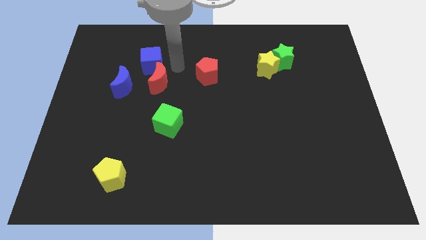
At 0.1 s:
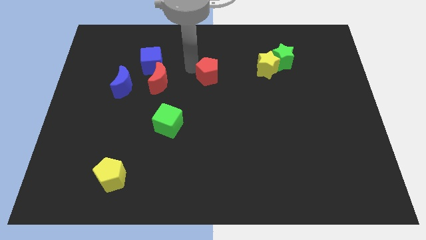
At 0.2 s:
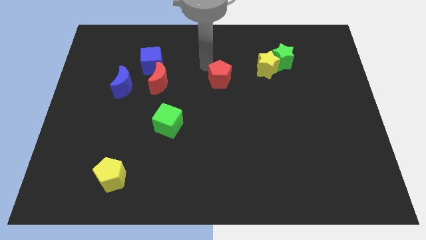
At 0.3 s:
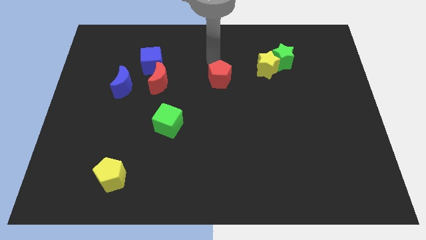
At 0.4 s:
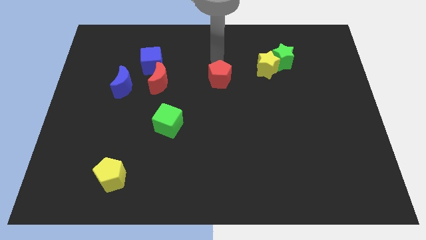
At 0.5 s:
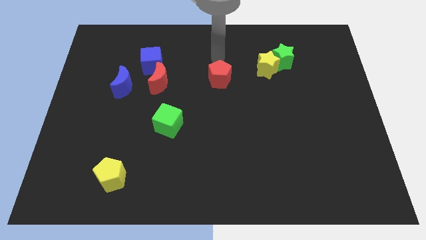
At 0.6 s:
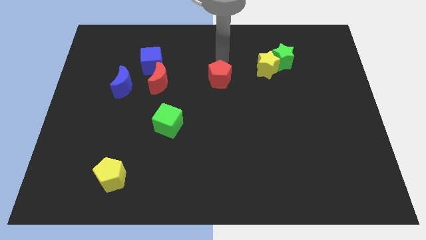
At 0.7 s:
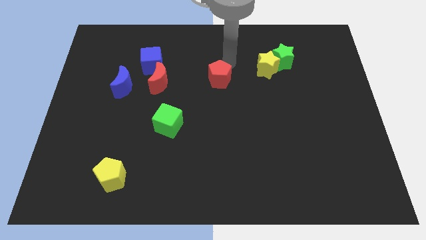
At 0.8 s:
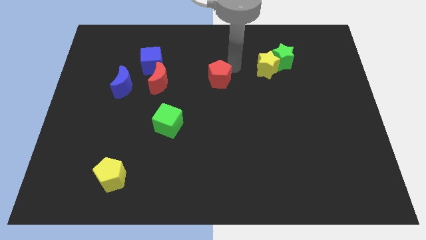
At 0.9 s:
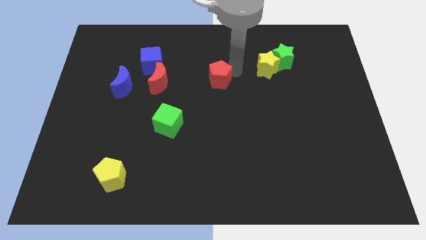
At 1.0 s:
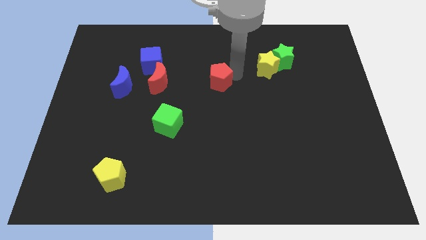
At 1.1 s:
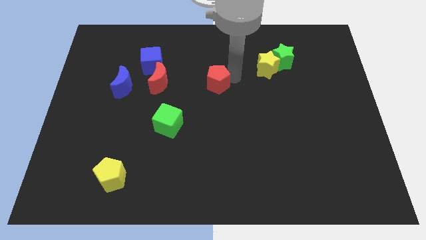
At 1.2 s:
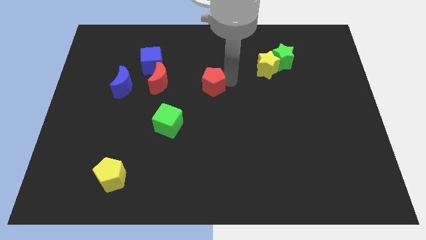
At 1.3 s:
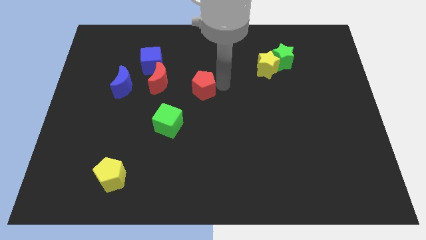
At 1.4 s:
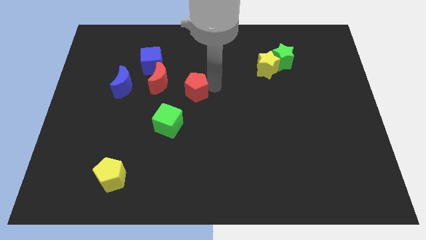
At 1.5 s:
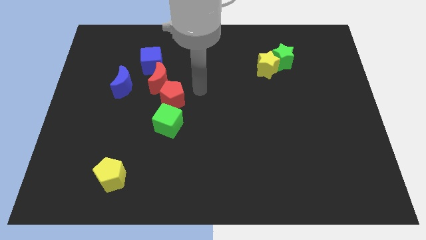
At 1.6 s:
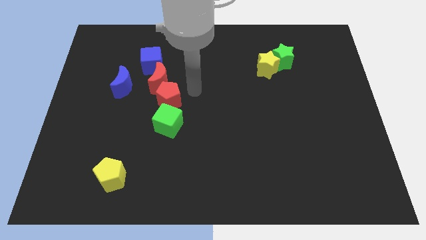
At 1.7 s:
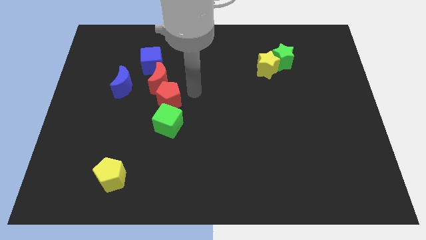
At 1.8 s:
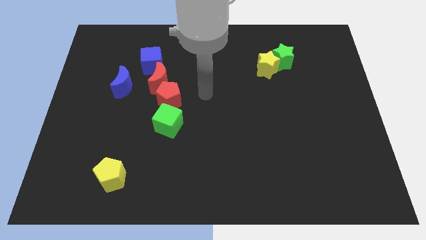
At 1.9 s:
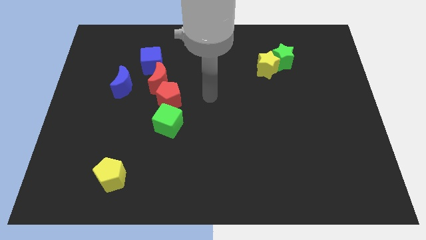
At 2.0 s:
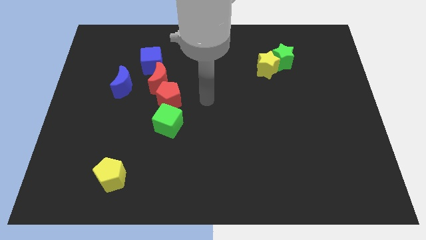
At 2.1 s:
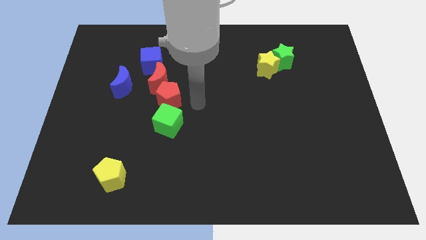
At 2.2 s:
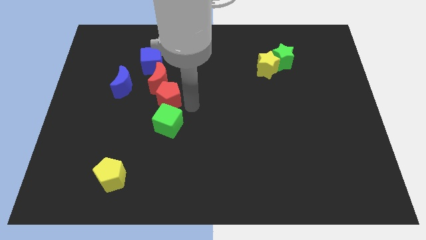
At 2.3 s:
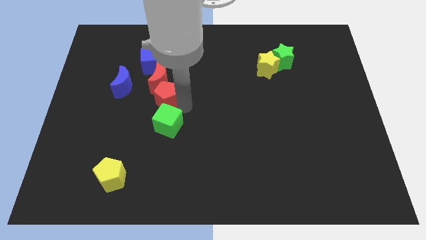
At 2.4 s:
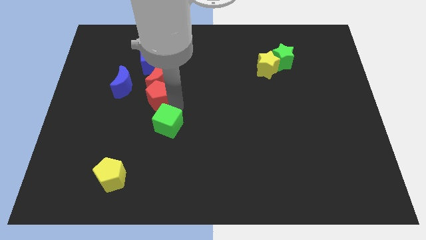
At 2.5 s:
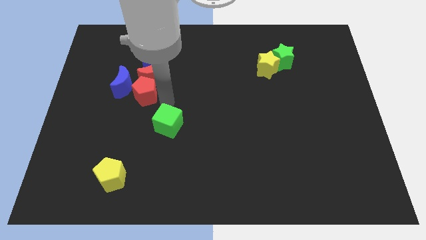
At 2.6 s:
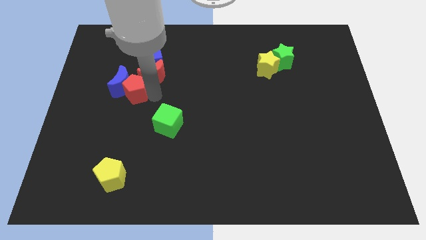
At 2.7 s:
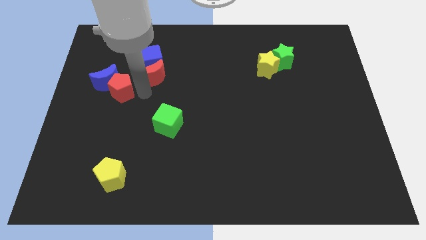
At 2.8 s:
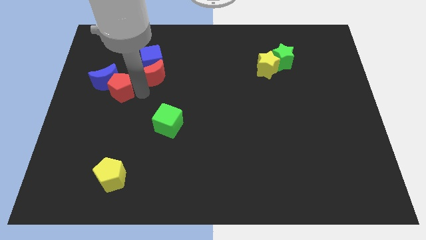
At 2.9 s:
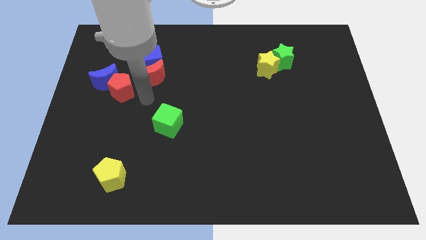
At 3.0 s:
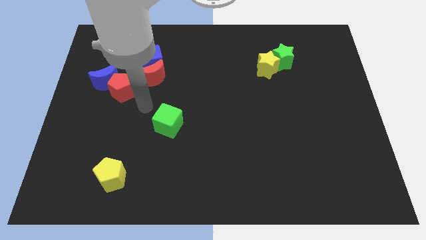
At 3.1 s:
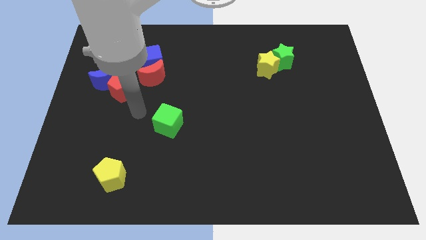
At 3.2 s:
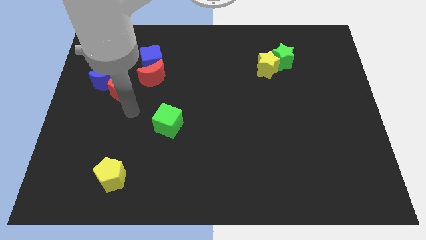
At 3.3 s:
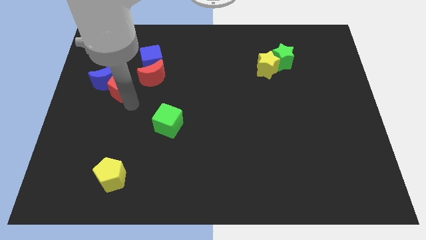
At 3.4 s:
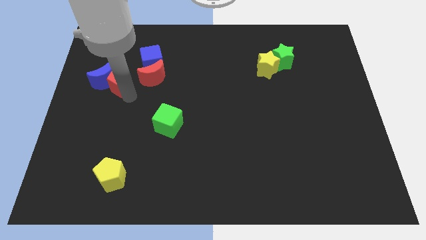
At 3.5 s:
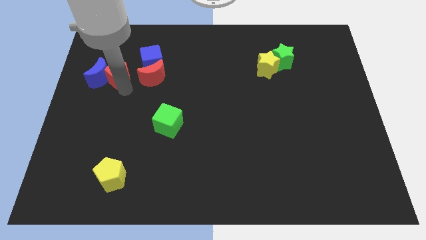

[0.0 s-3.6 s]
place the red pentagon in between red moon and blue moon

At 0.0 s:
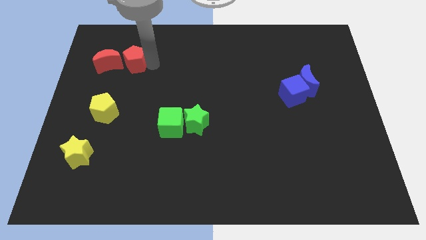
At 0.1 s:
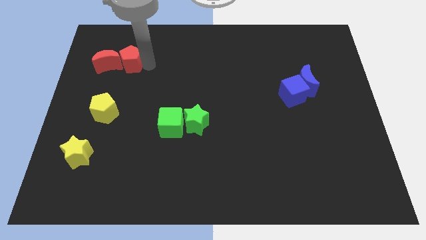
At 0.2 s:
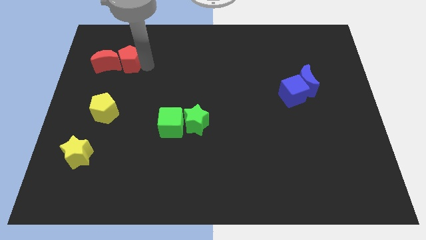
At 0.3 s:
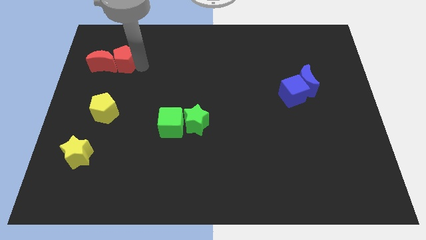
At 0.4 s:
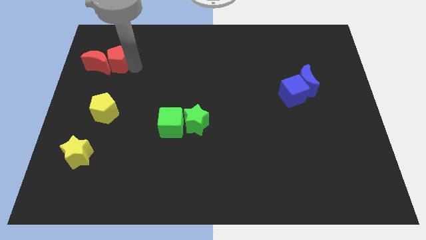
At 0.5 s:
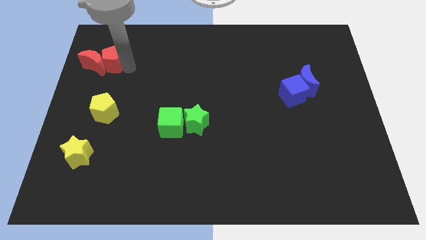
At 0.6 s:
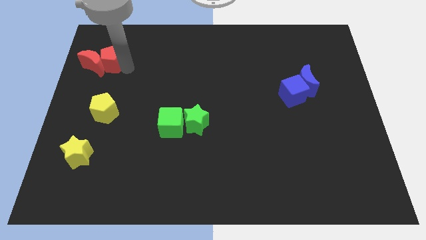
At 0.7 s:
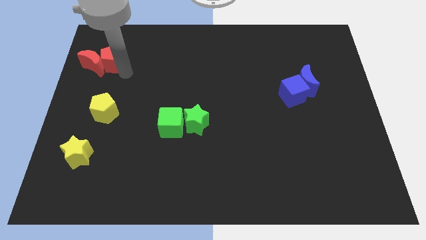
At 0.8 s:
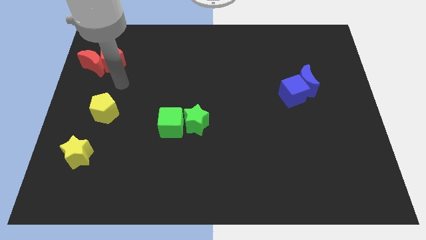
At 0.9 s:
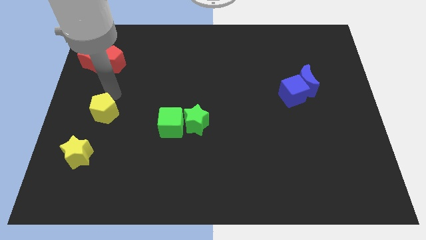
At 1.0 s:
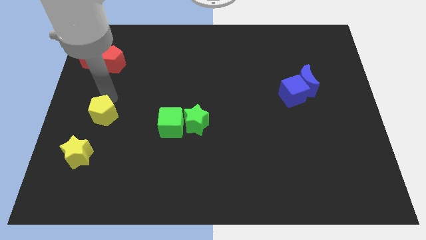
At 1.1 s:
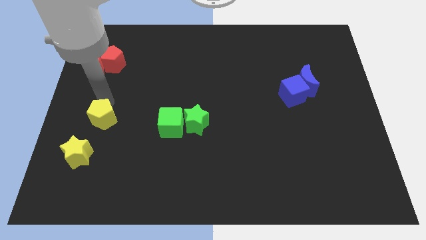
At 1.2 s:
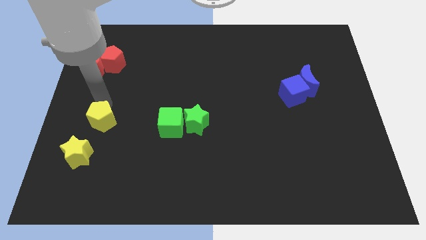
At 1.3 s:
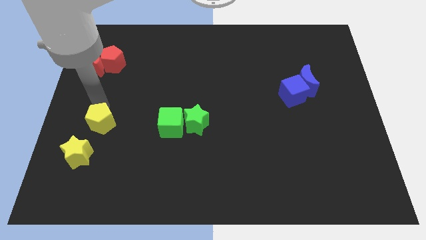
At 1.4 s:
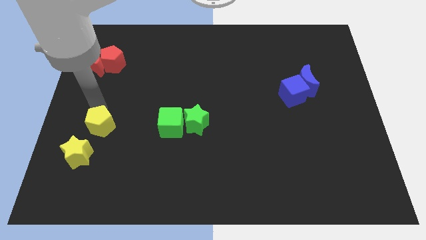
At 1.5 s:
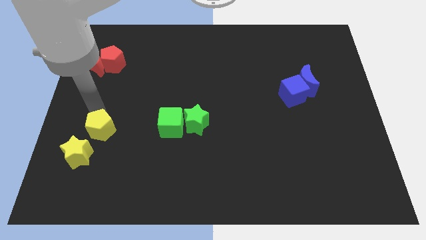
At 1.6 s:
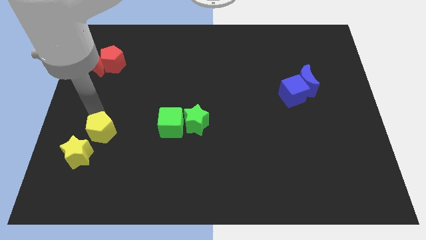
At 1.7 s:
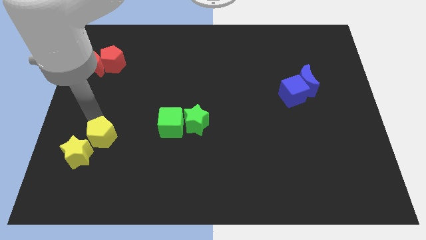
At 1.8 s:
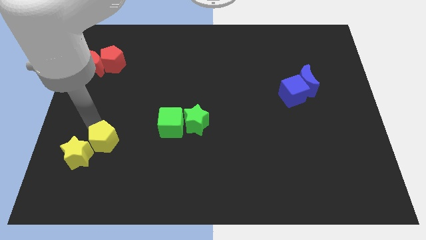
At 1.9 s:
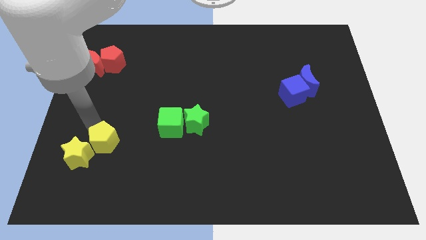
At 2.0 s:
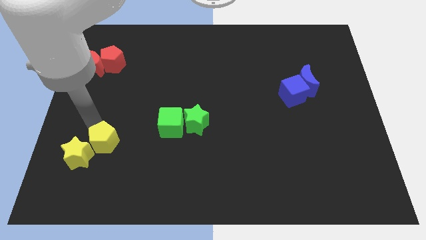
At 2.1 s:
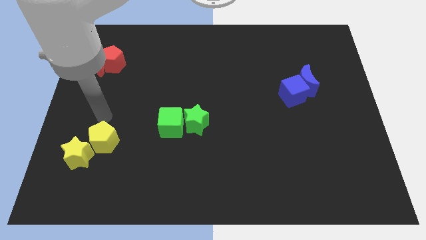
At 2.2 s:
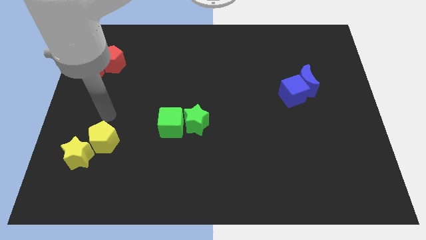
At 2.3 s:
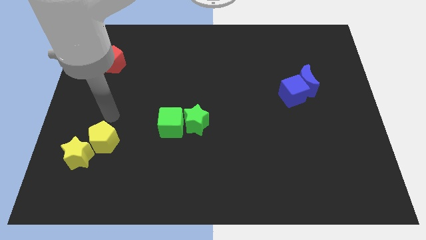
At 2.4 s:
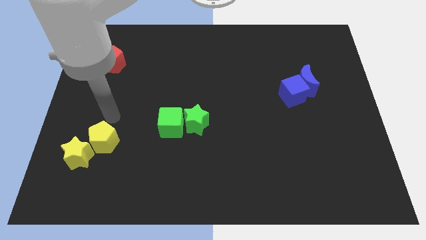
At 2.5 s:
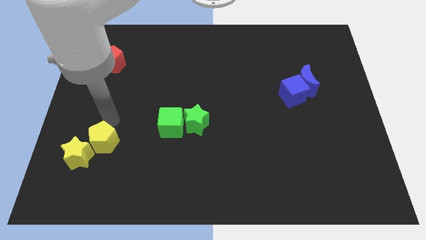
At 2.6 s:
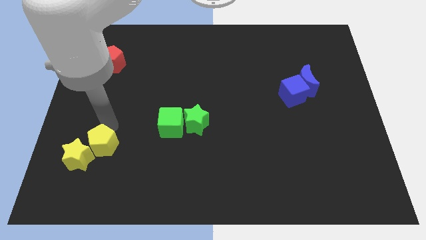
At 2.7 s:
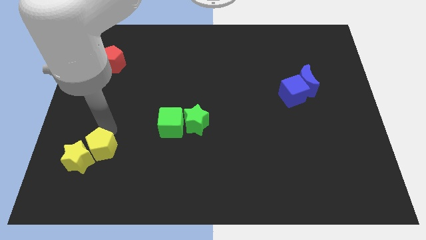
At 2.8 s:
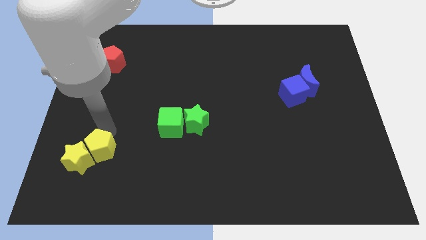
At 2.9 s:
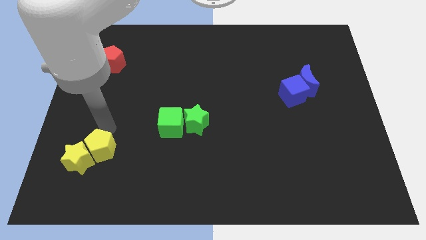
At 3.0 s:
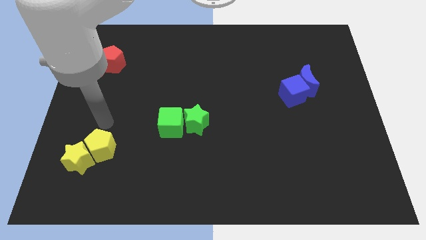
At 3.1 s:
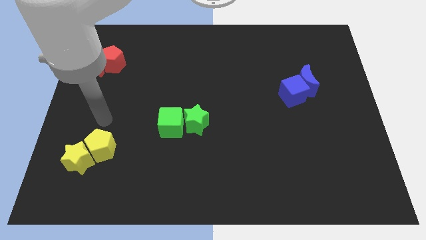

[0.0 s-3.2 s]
place yellow pentagon to the top right of yellow star

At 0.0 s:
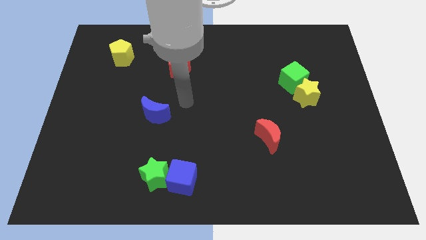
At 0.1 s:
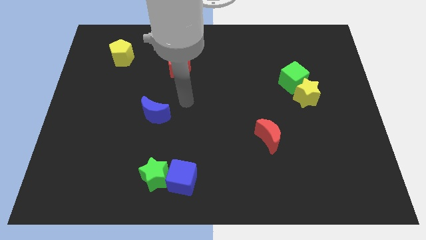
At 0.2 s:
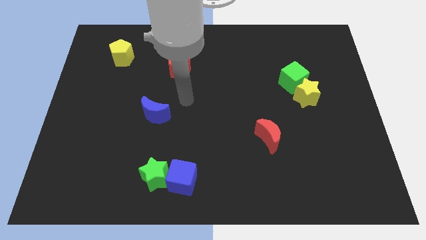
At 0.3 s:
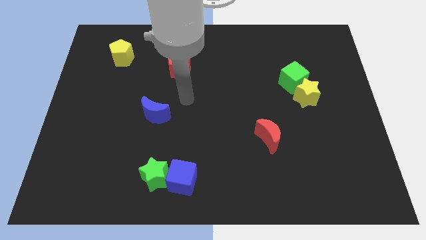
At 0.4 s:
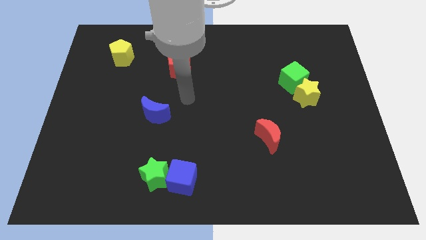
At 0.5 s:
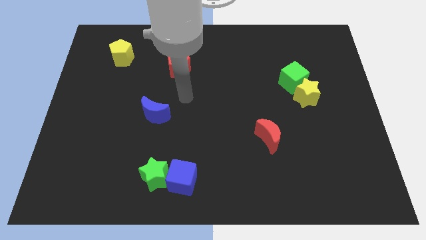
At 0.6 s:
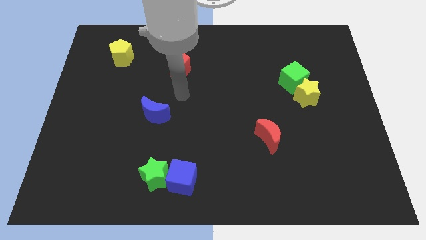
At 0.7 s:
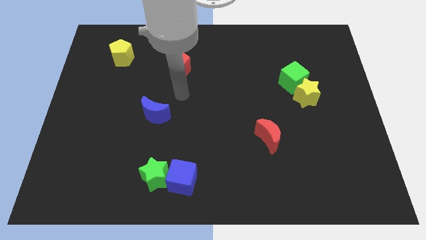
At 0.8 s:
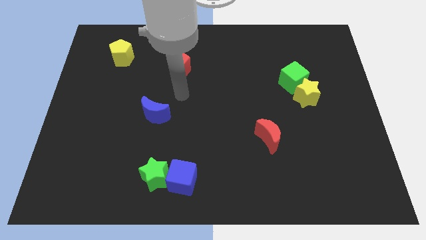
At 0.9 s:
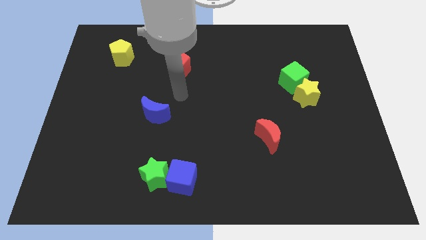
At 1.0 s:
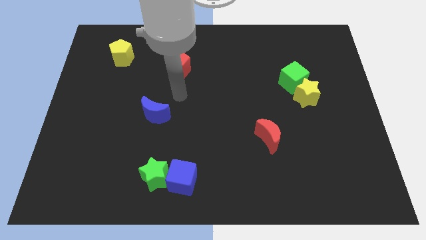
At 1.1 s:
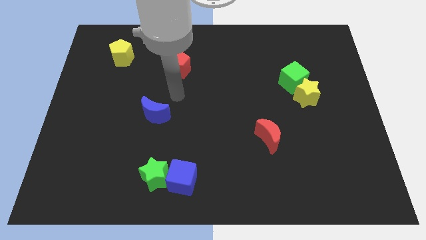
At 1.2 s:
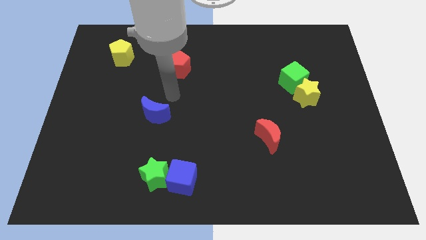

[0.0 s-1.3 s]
point your arm below the red pentagon

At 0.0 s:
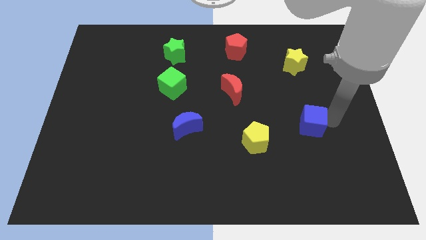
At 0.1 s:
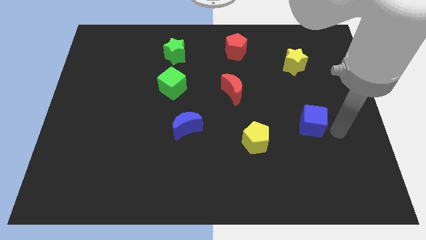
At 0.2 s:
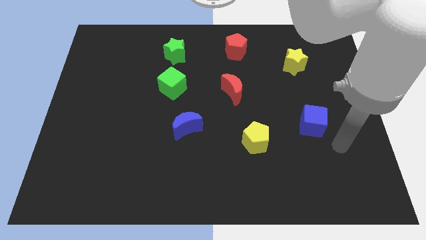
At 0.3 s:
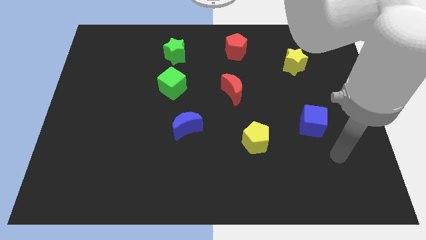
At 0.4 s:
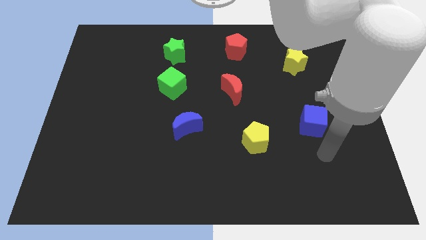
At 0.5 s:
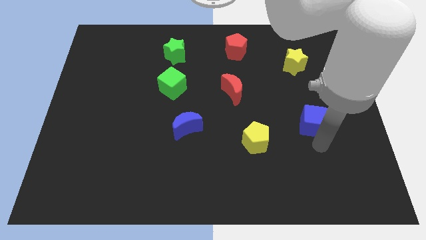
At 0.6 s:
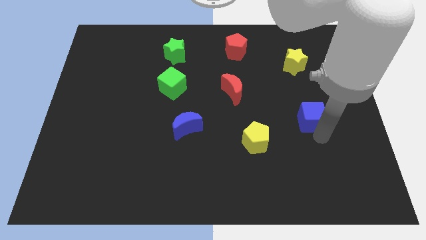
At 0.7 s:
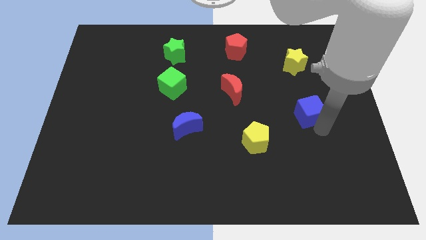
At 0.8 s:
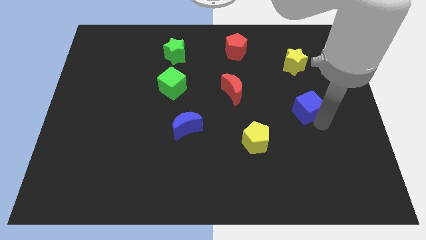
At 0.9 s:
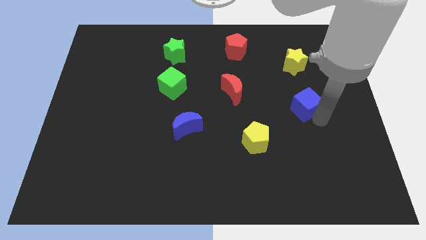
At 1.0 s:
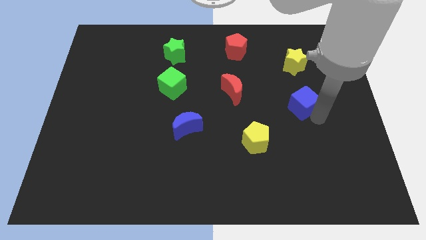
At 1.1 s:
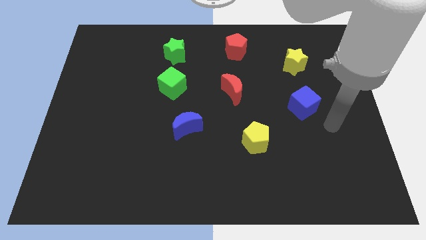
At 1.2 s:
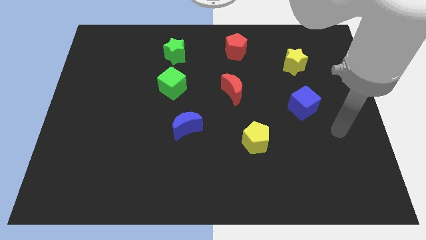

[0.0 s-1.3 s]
place the blue cube below the yellow star
